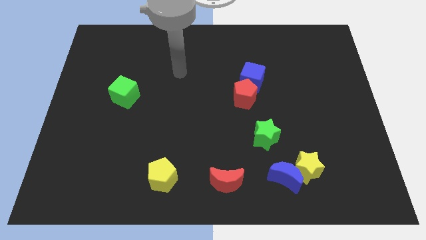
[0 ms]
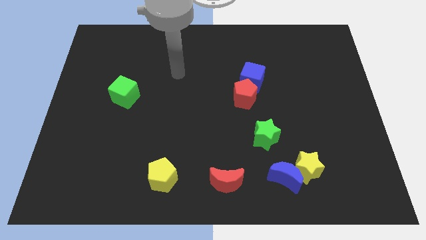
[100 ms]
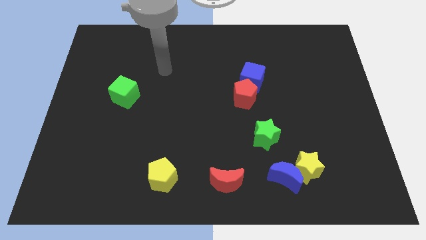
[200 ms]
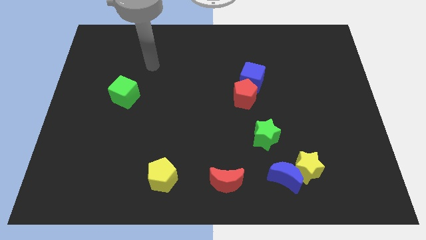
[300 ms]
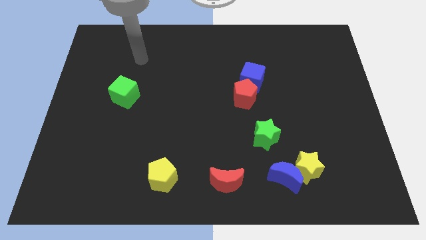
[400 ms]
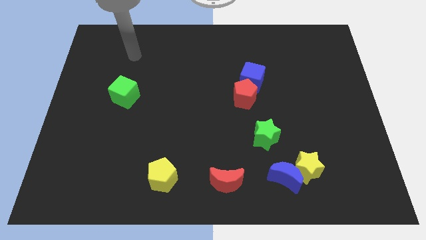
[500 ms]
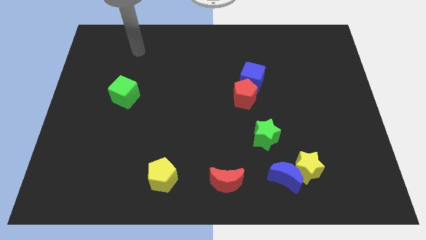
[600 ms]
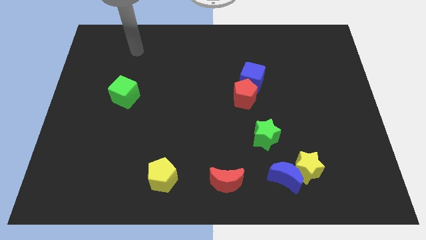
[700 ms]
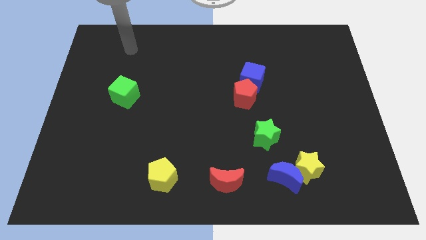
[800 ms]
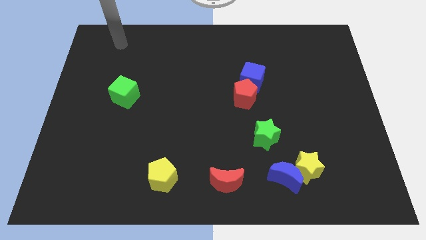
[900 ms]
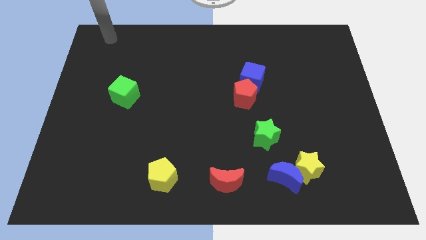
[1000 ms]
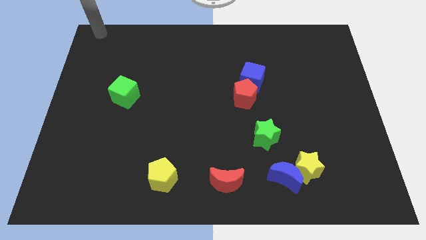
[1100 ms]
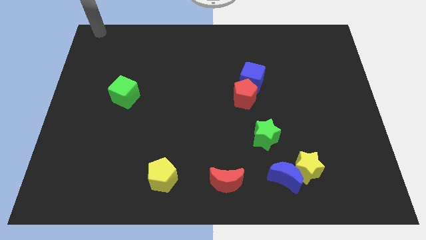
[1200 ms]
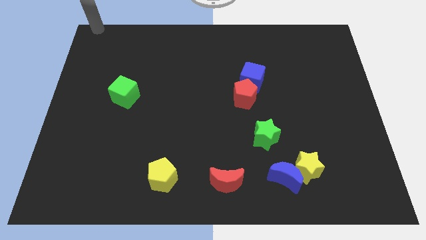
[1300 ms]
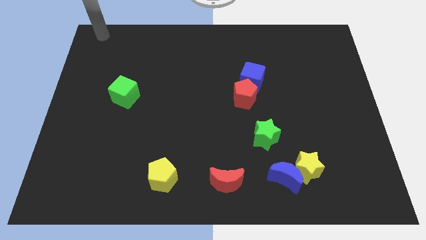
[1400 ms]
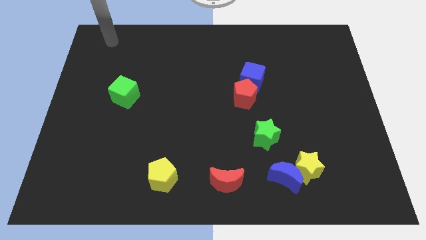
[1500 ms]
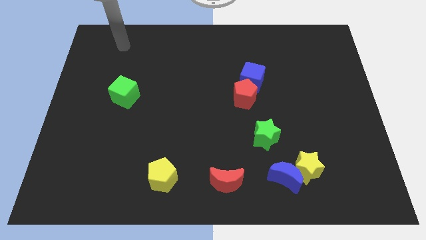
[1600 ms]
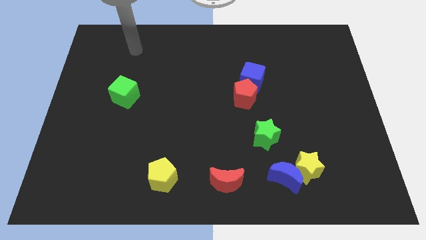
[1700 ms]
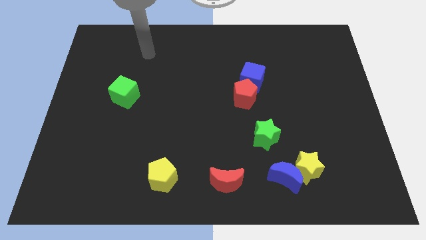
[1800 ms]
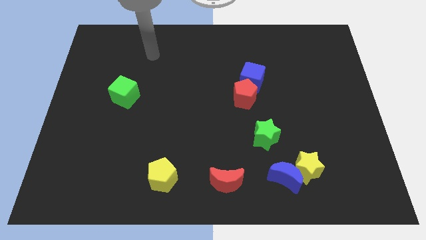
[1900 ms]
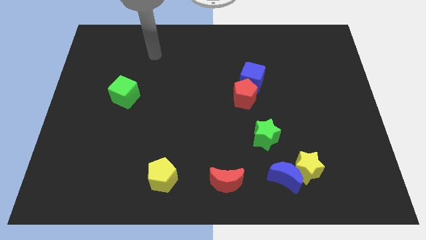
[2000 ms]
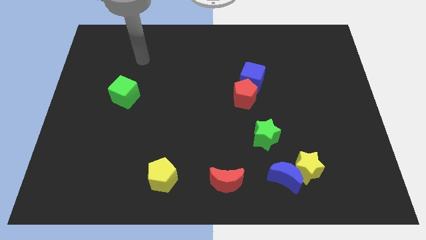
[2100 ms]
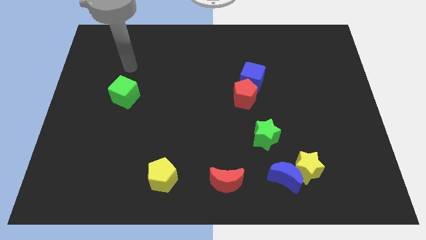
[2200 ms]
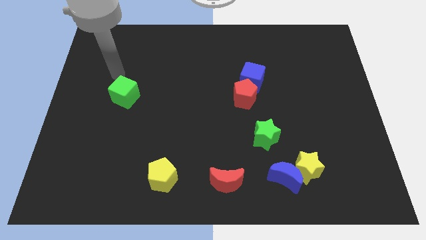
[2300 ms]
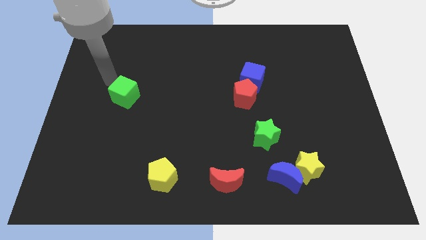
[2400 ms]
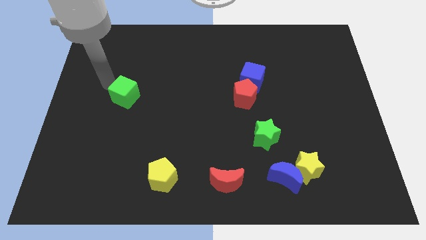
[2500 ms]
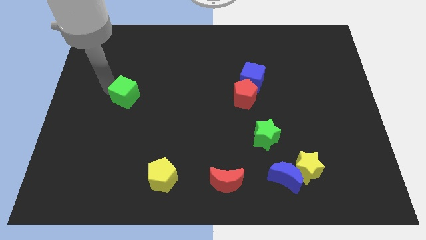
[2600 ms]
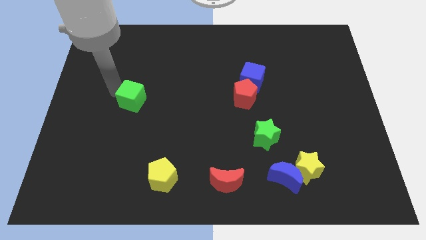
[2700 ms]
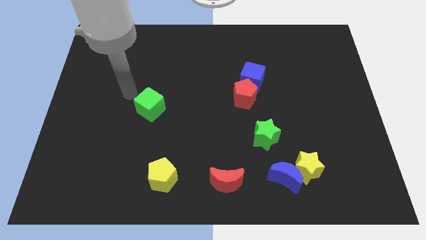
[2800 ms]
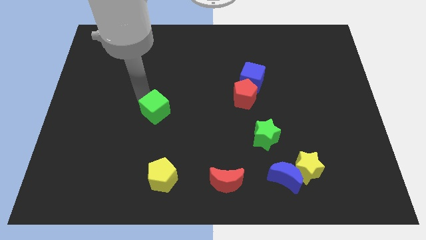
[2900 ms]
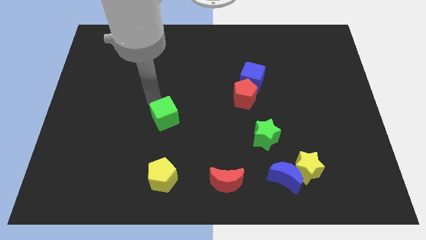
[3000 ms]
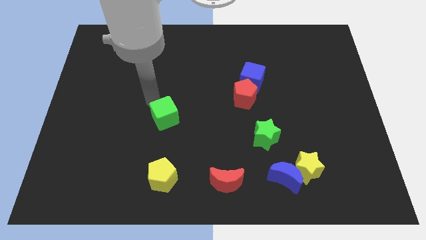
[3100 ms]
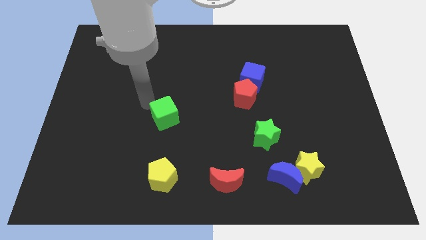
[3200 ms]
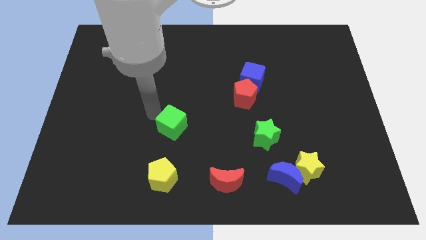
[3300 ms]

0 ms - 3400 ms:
place the green cube above the yellow pentagon

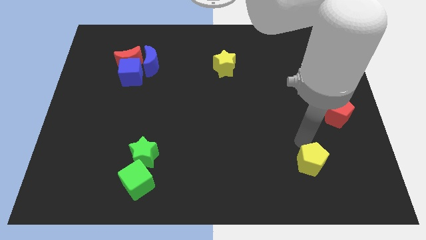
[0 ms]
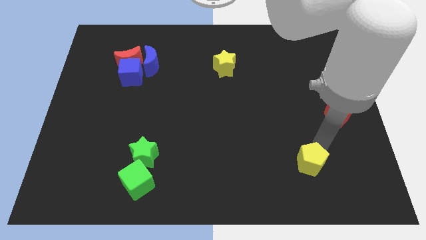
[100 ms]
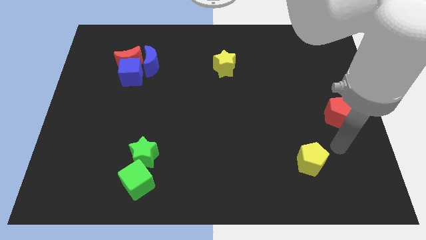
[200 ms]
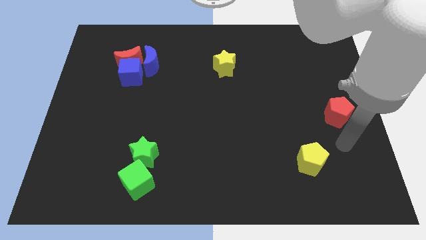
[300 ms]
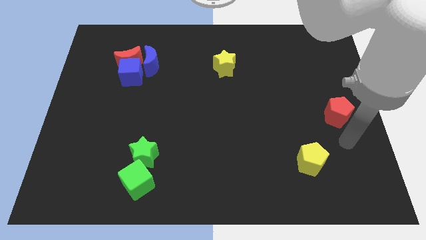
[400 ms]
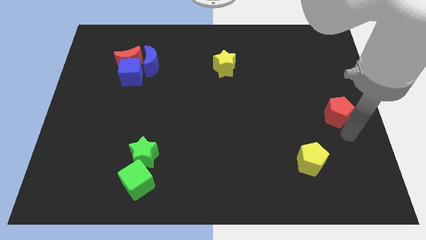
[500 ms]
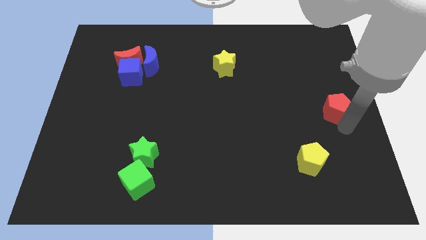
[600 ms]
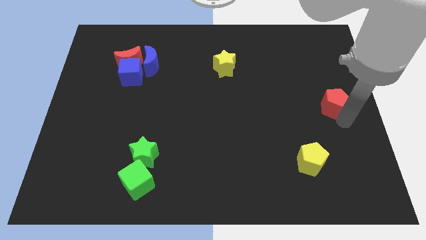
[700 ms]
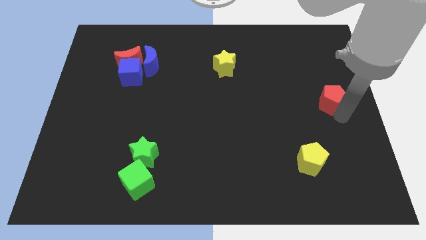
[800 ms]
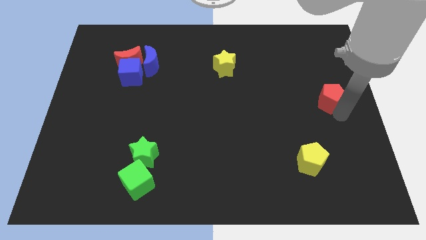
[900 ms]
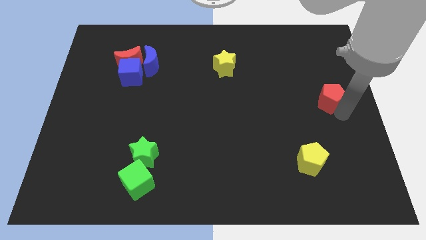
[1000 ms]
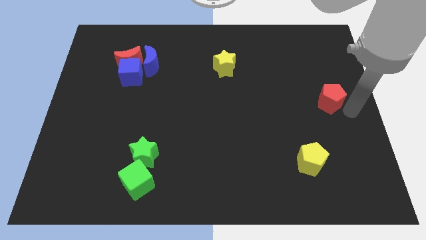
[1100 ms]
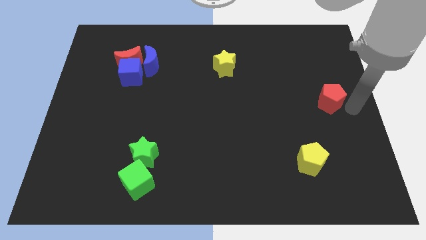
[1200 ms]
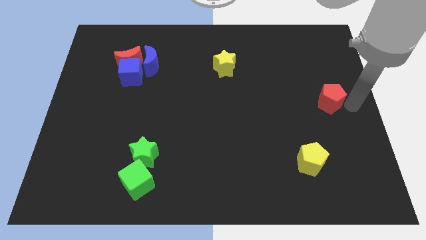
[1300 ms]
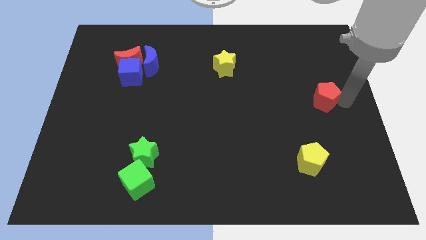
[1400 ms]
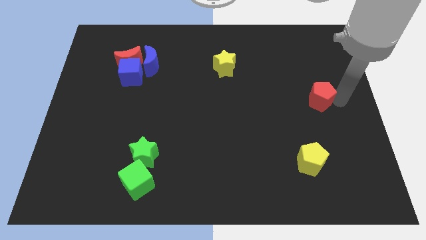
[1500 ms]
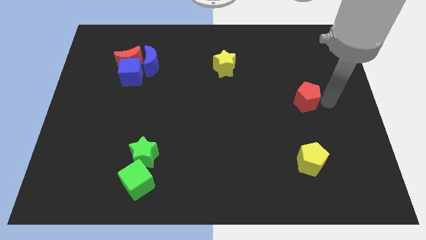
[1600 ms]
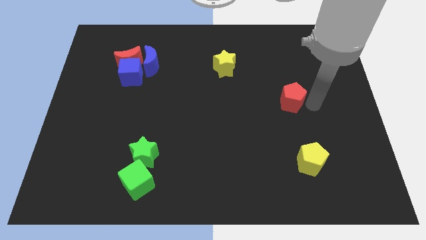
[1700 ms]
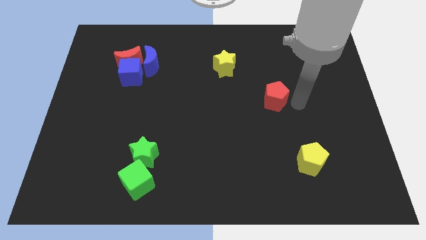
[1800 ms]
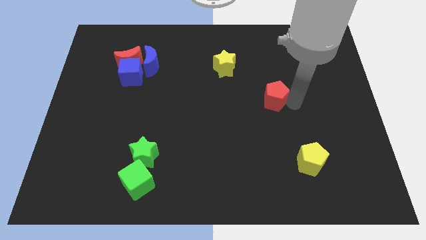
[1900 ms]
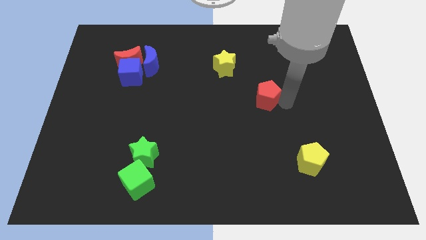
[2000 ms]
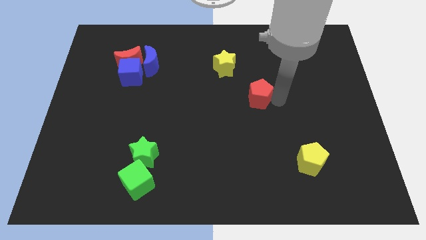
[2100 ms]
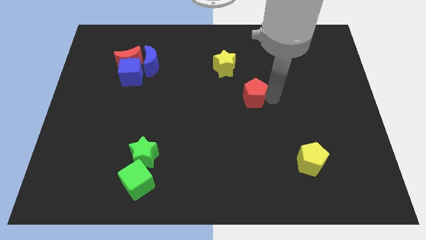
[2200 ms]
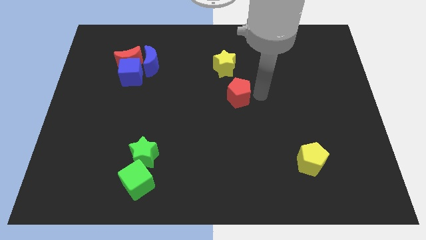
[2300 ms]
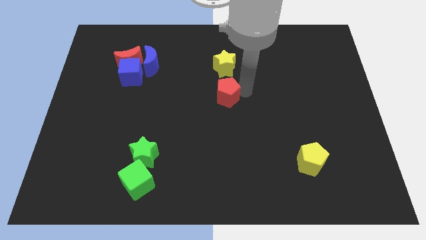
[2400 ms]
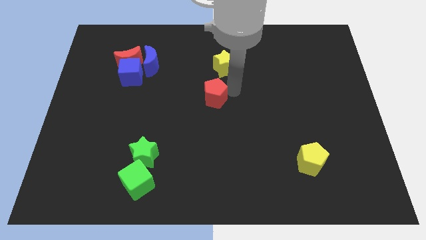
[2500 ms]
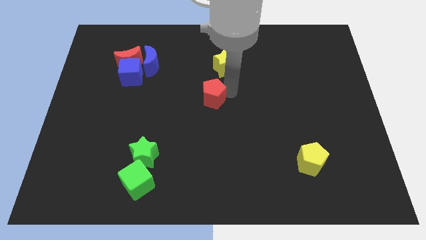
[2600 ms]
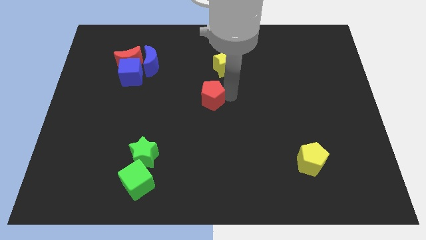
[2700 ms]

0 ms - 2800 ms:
push the red pentagon upward

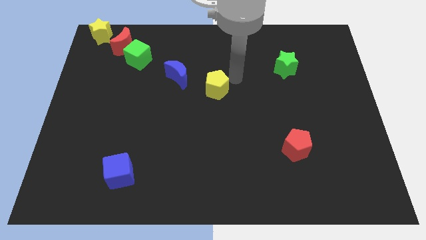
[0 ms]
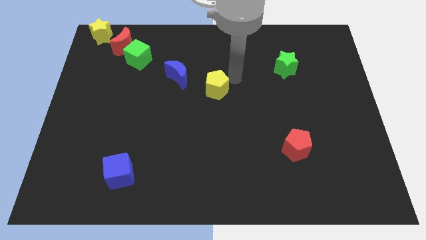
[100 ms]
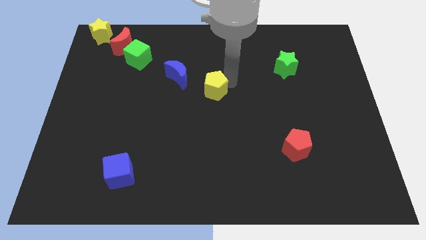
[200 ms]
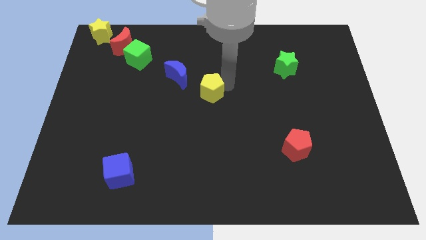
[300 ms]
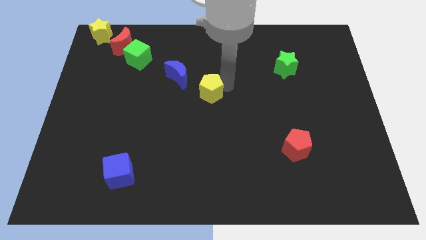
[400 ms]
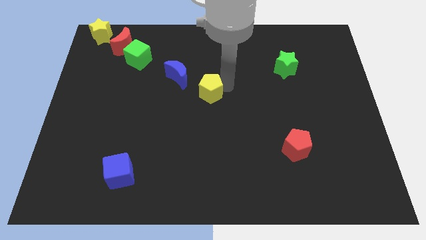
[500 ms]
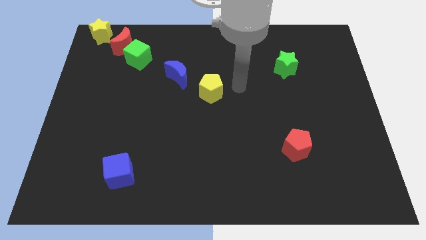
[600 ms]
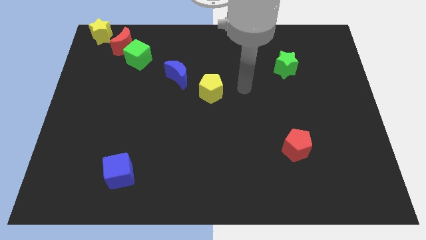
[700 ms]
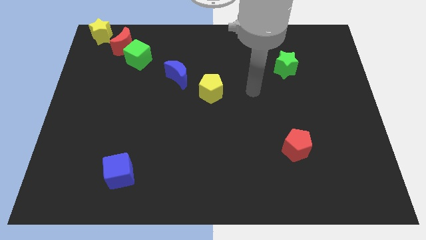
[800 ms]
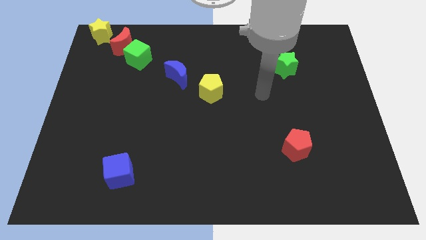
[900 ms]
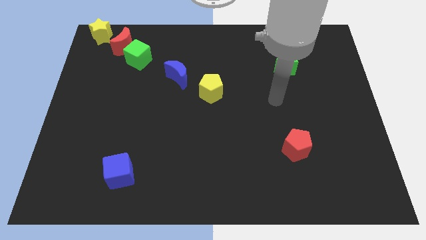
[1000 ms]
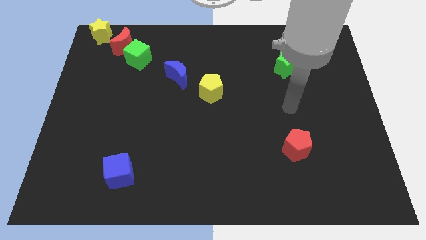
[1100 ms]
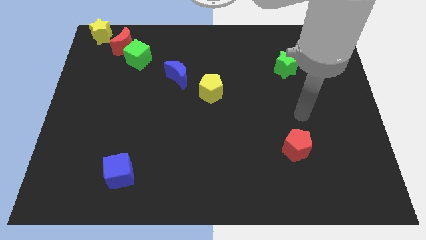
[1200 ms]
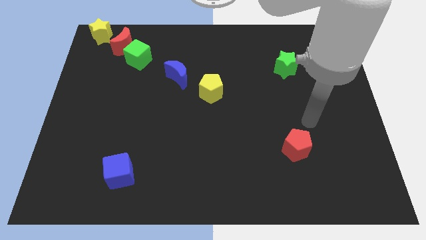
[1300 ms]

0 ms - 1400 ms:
place the yellow pentagon underneath the blue moon

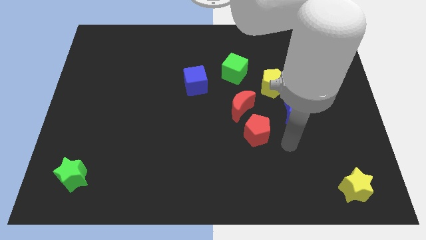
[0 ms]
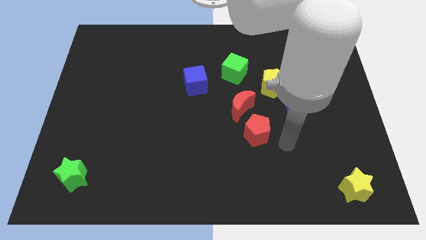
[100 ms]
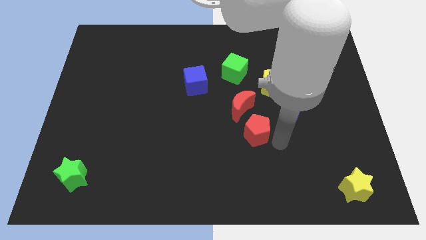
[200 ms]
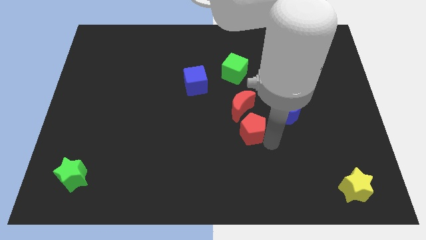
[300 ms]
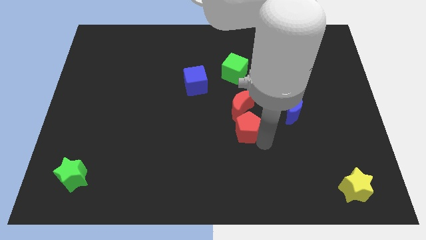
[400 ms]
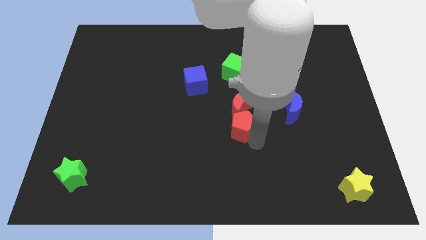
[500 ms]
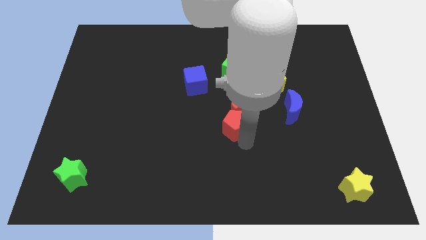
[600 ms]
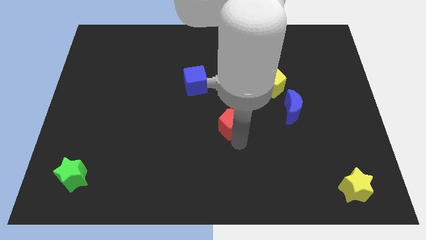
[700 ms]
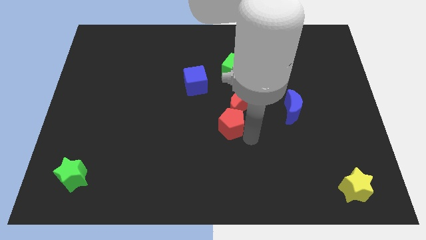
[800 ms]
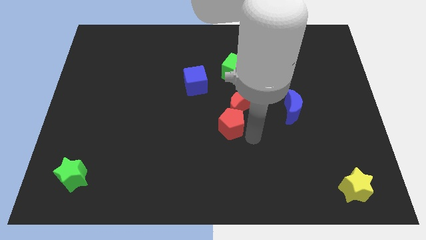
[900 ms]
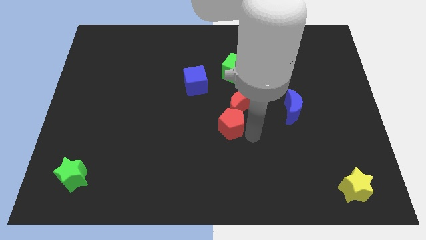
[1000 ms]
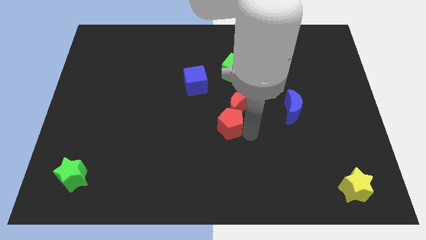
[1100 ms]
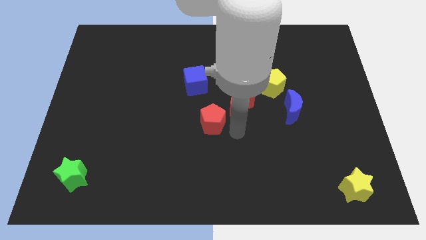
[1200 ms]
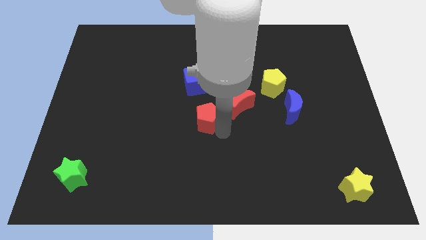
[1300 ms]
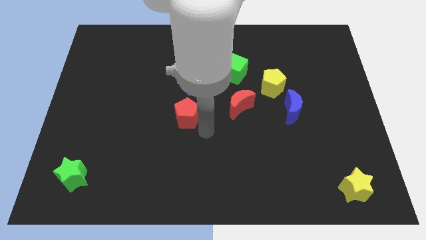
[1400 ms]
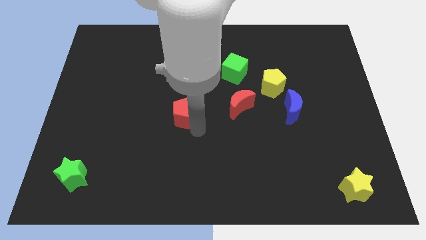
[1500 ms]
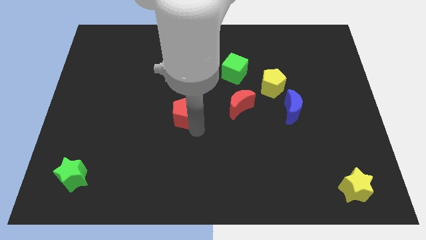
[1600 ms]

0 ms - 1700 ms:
move red pentagon to the center of the board
